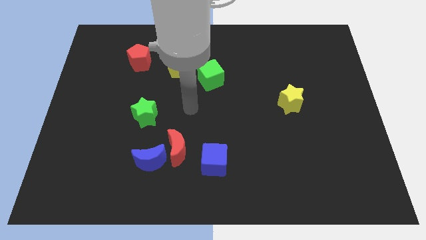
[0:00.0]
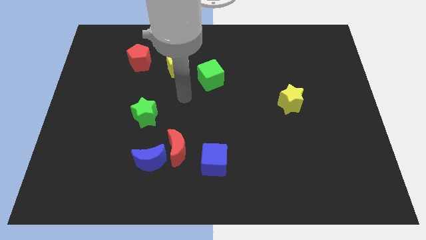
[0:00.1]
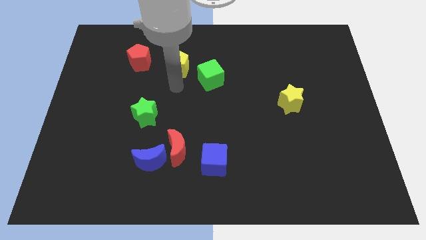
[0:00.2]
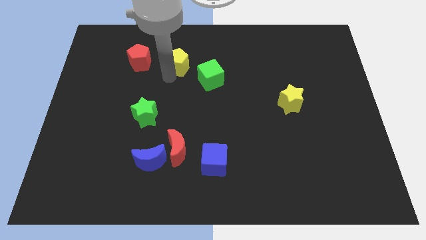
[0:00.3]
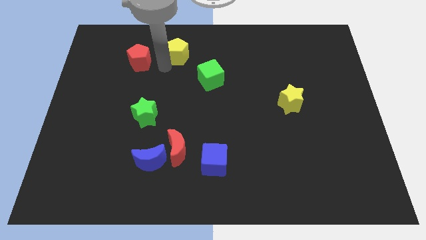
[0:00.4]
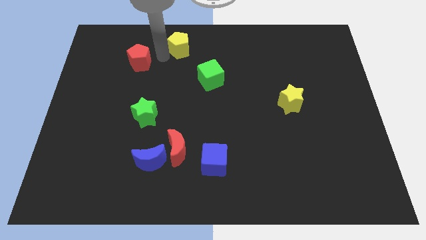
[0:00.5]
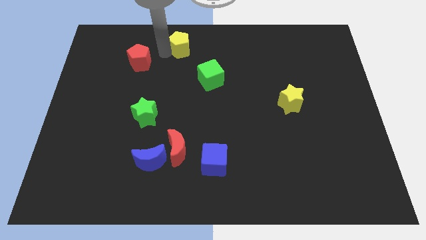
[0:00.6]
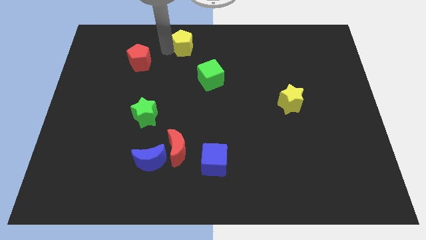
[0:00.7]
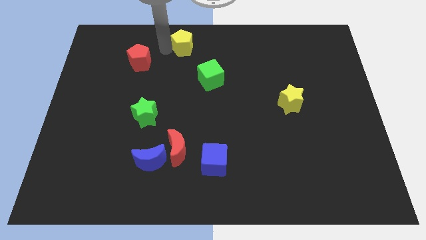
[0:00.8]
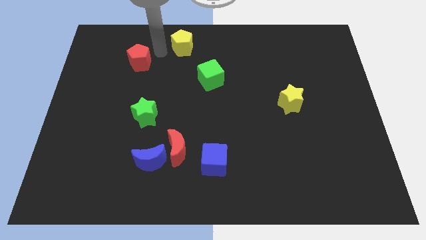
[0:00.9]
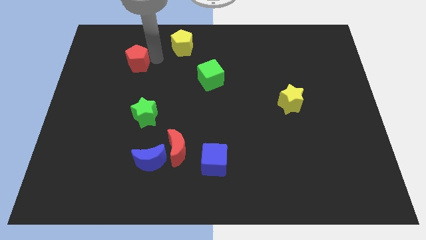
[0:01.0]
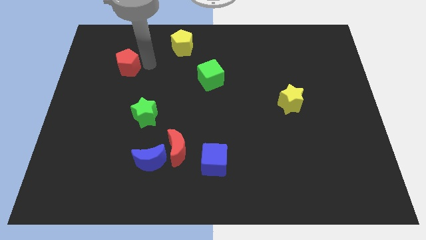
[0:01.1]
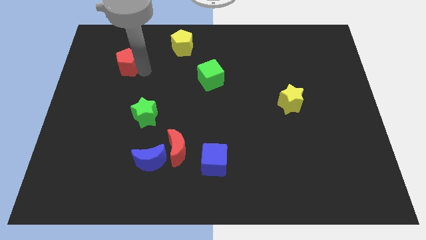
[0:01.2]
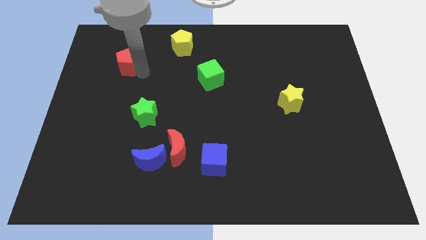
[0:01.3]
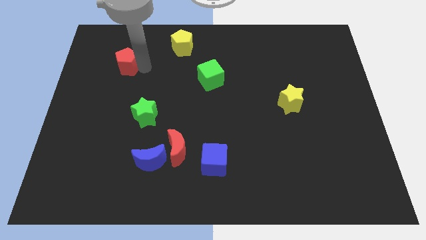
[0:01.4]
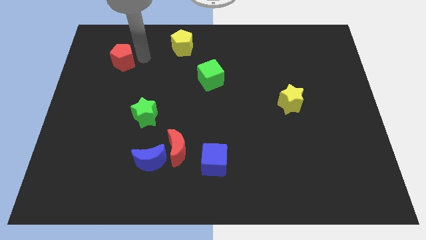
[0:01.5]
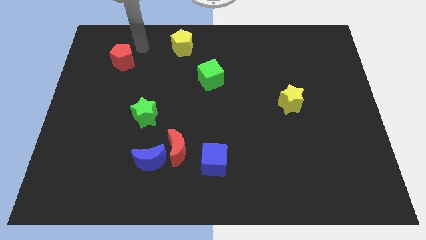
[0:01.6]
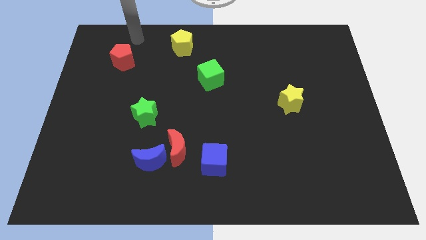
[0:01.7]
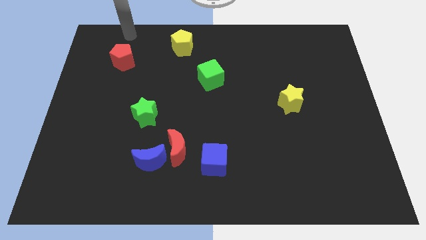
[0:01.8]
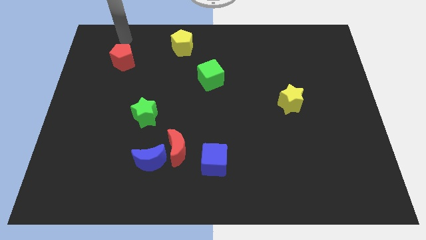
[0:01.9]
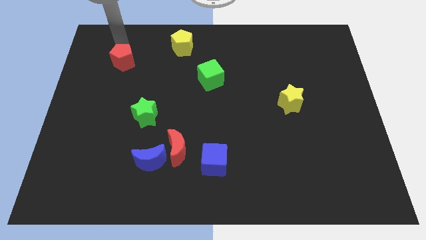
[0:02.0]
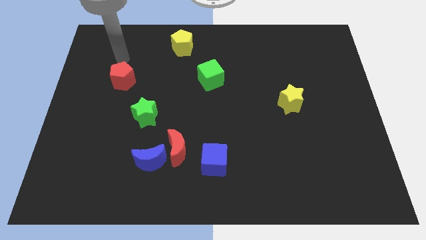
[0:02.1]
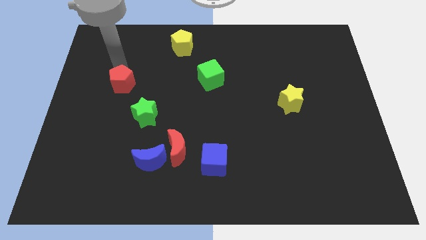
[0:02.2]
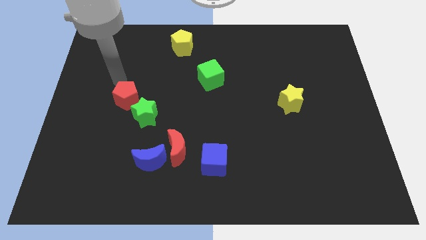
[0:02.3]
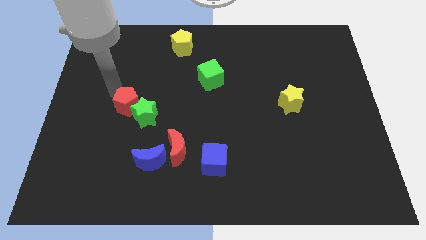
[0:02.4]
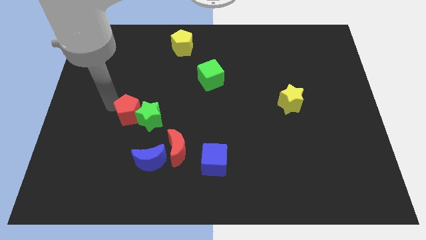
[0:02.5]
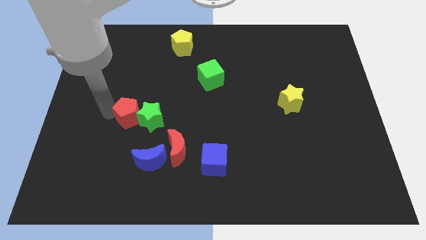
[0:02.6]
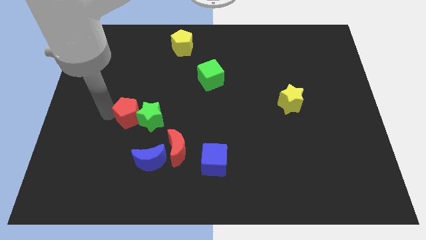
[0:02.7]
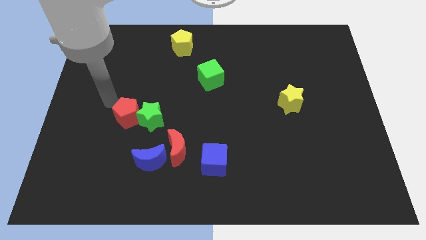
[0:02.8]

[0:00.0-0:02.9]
push red pentagon into green star

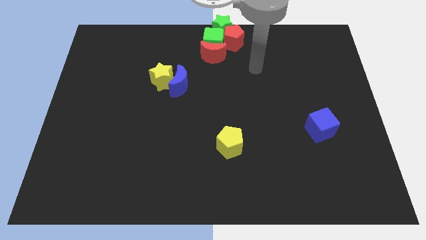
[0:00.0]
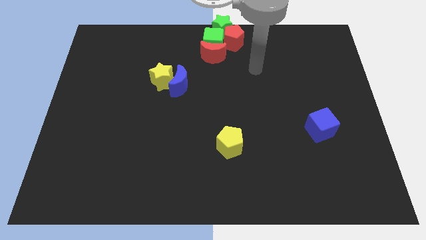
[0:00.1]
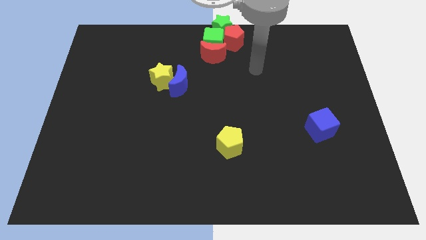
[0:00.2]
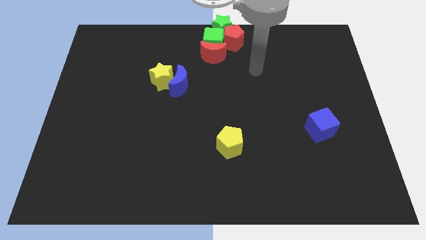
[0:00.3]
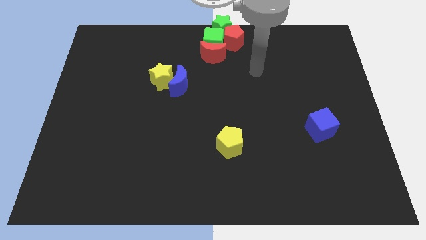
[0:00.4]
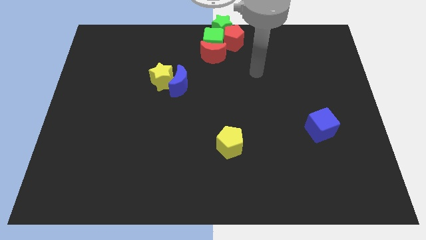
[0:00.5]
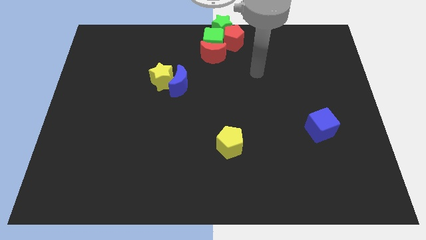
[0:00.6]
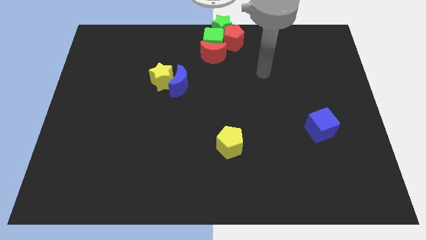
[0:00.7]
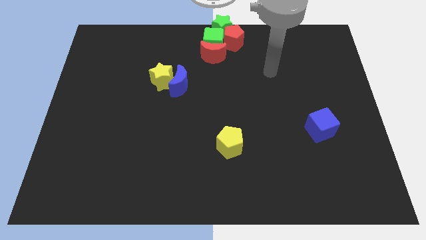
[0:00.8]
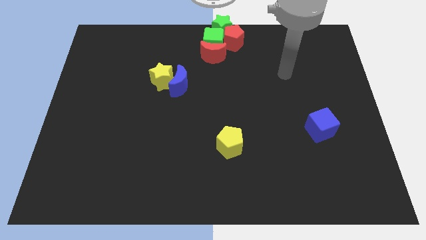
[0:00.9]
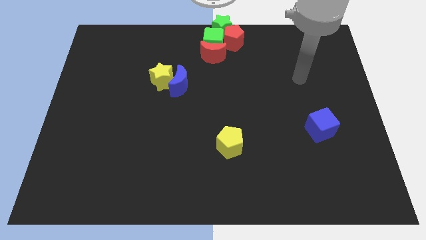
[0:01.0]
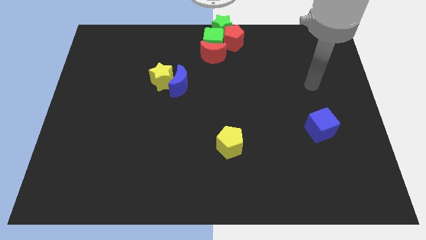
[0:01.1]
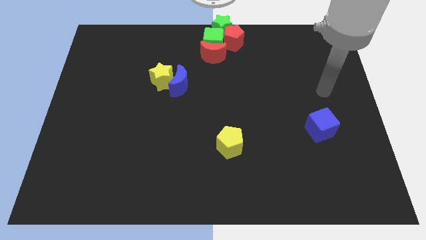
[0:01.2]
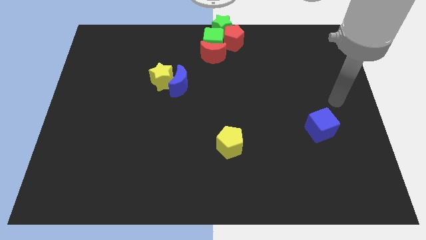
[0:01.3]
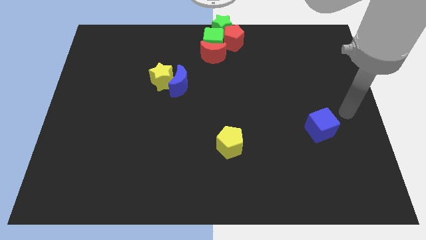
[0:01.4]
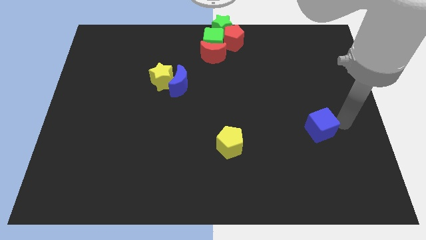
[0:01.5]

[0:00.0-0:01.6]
move your arm towards the blue cube

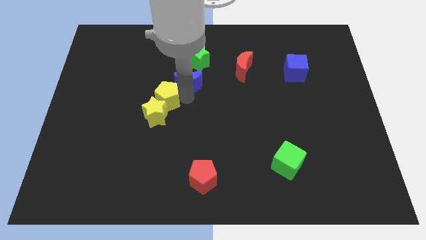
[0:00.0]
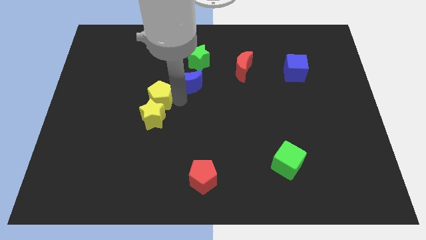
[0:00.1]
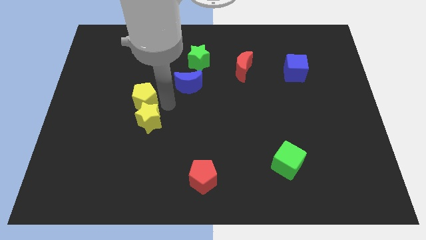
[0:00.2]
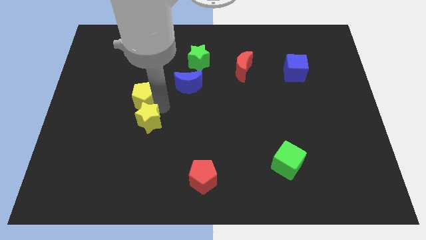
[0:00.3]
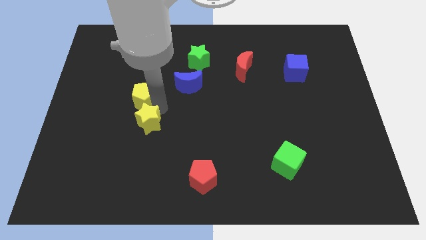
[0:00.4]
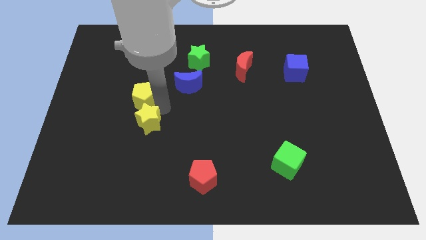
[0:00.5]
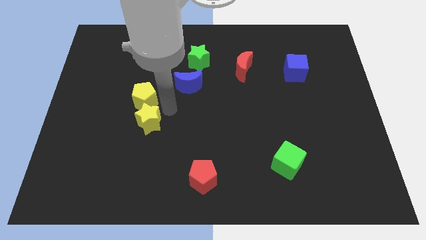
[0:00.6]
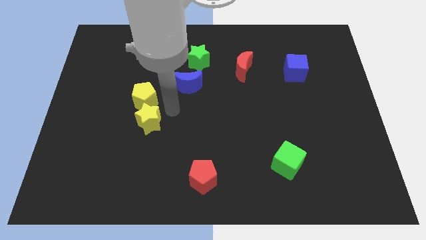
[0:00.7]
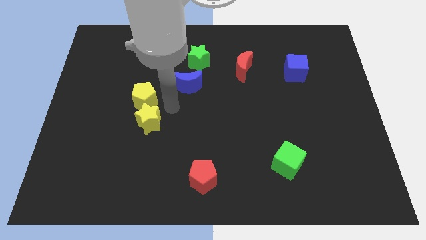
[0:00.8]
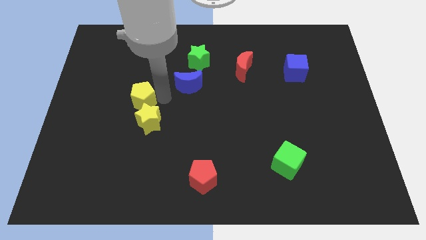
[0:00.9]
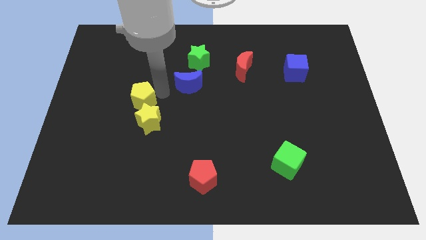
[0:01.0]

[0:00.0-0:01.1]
slide yellow blocks slightly to the left side of the board

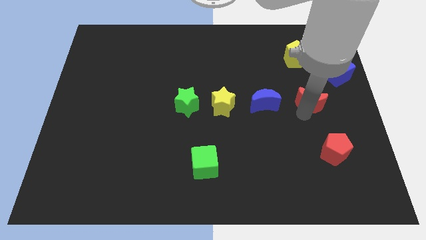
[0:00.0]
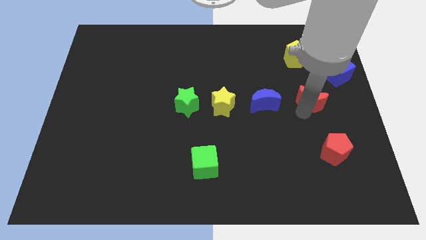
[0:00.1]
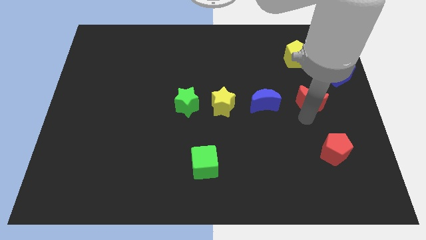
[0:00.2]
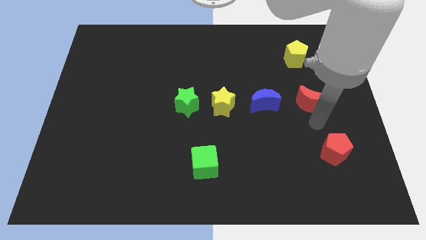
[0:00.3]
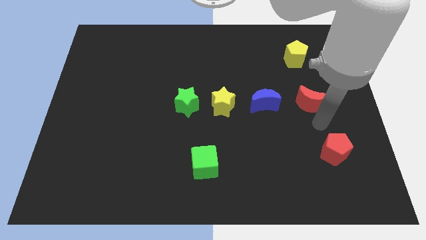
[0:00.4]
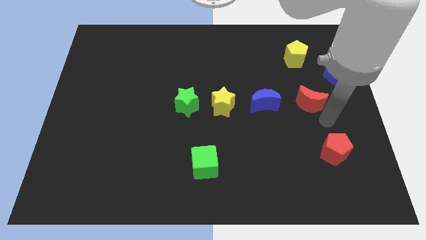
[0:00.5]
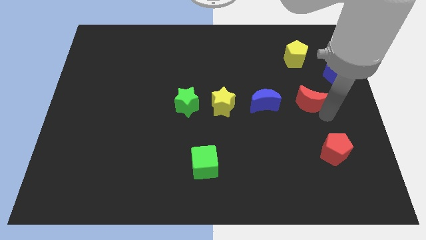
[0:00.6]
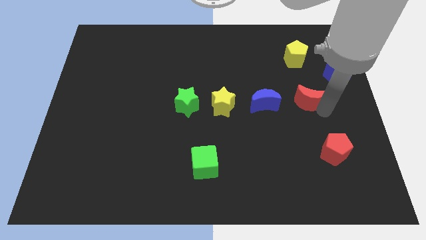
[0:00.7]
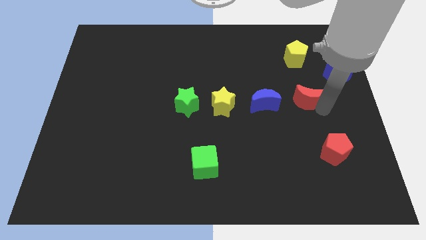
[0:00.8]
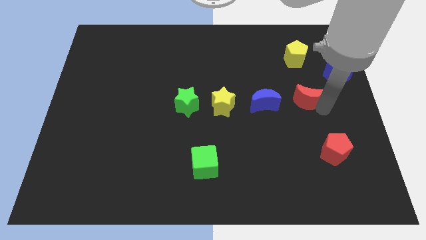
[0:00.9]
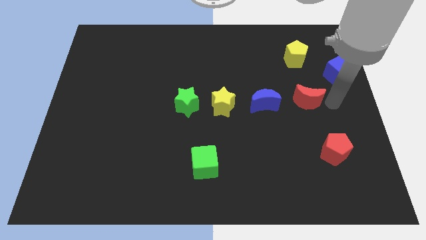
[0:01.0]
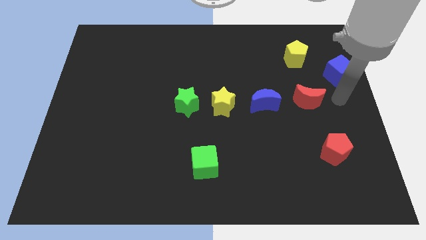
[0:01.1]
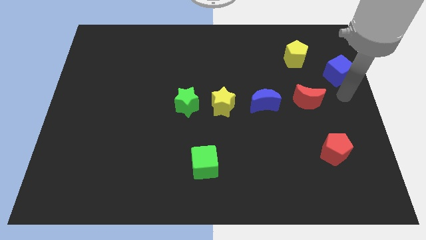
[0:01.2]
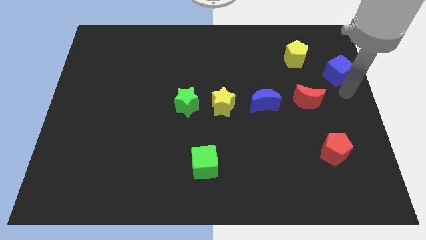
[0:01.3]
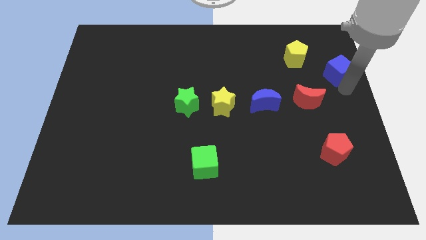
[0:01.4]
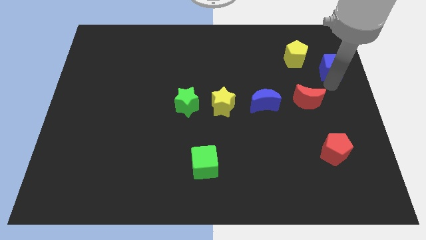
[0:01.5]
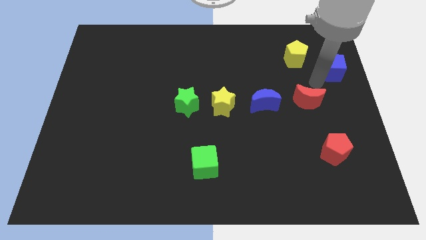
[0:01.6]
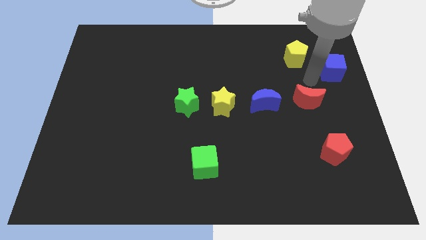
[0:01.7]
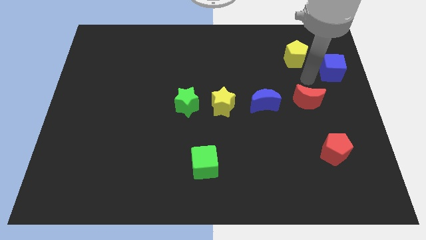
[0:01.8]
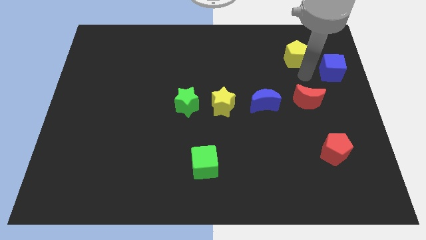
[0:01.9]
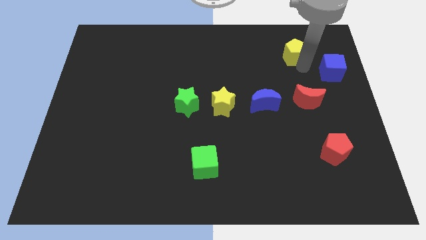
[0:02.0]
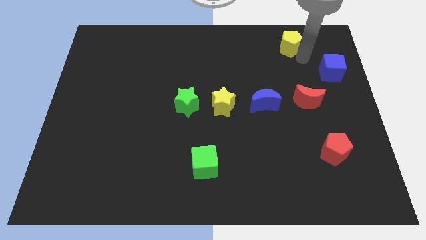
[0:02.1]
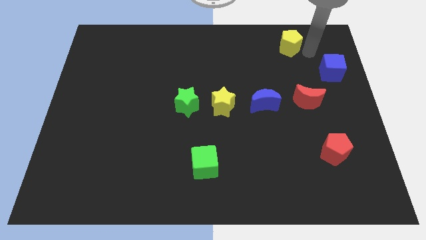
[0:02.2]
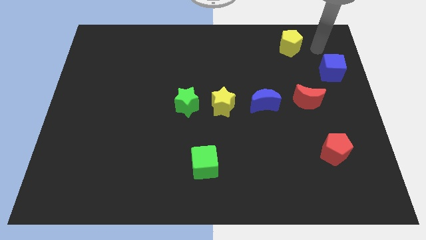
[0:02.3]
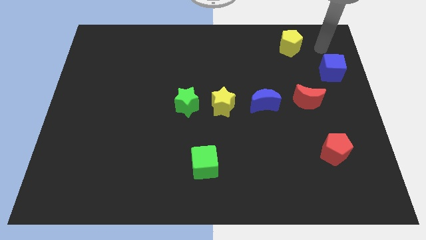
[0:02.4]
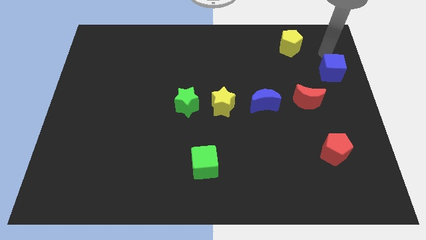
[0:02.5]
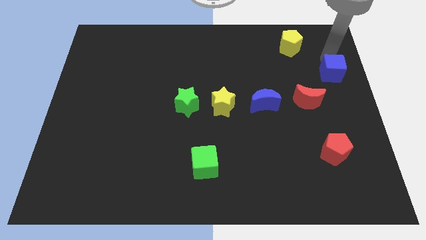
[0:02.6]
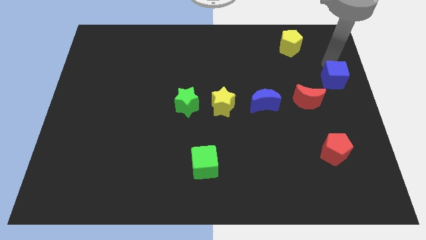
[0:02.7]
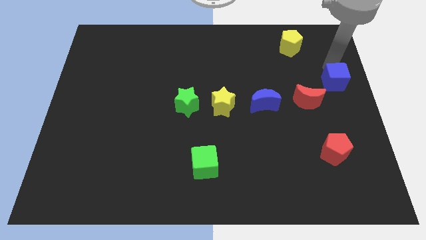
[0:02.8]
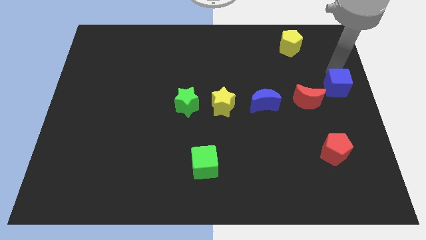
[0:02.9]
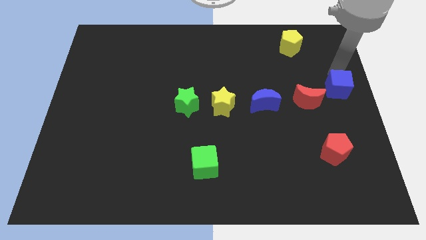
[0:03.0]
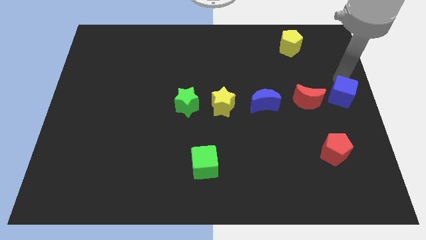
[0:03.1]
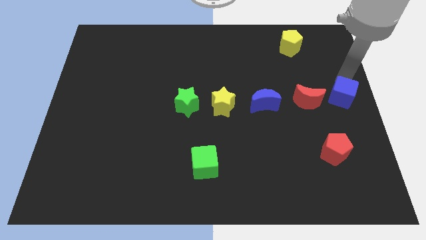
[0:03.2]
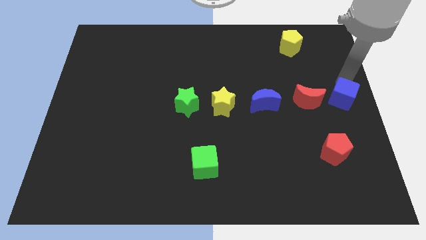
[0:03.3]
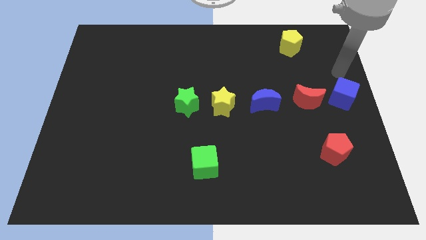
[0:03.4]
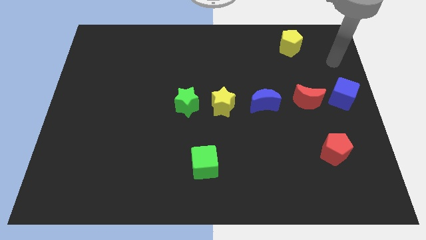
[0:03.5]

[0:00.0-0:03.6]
push blue cube beside red crescent
